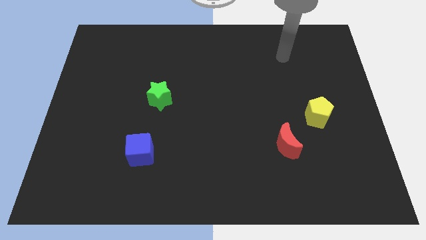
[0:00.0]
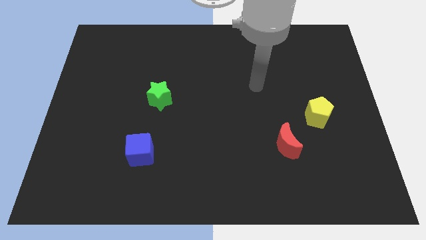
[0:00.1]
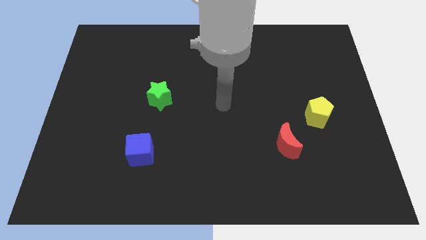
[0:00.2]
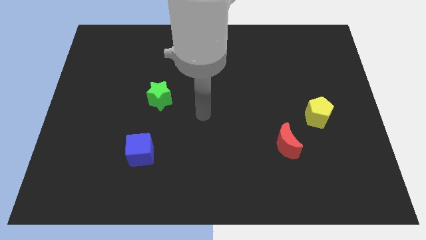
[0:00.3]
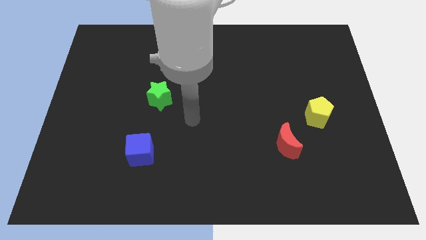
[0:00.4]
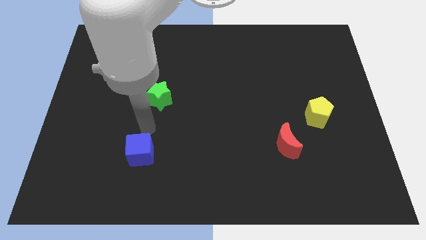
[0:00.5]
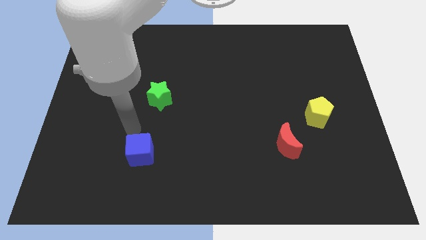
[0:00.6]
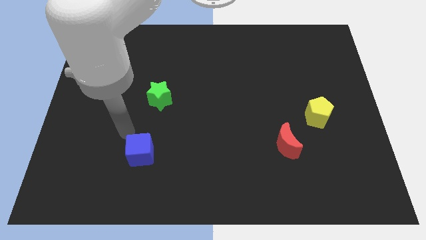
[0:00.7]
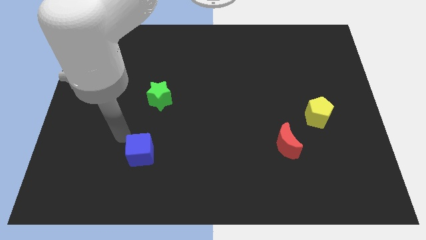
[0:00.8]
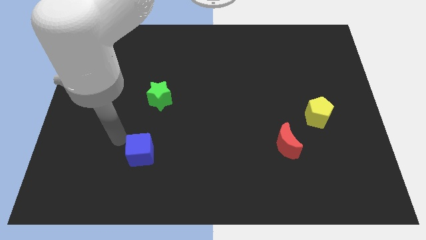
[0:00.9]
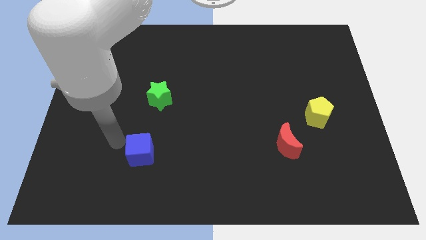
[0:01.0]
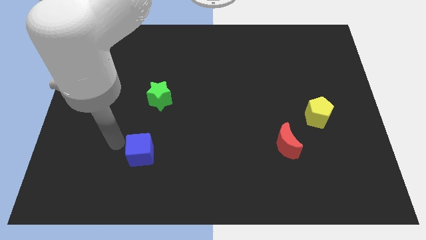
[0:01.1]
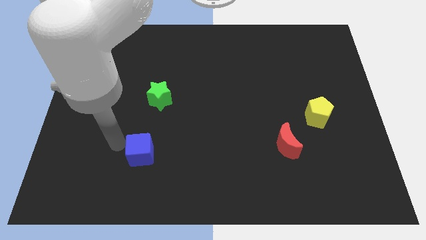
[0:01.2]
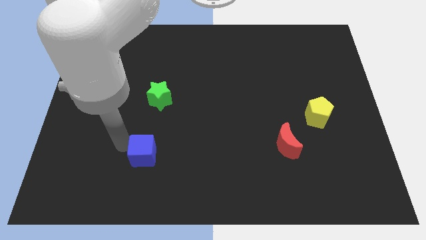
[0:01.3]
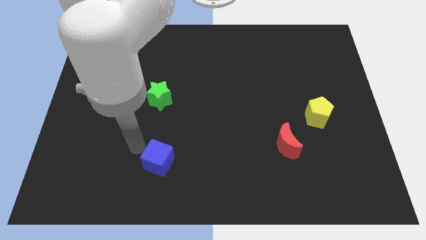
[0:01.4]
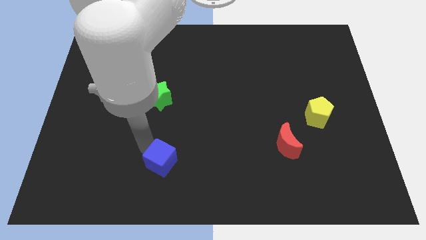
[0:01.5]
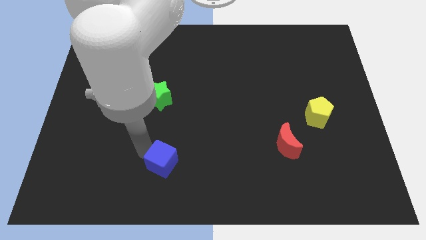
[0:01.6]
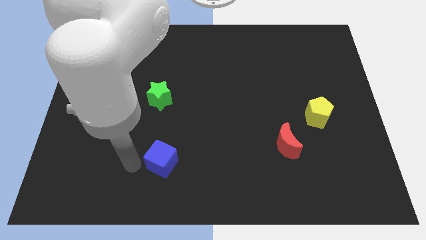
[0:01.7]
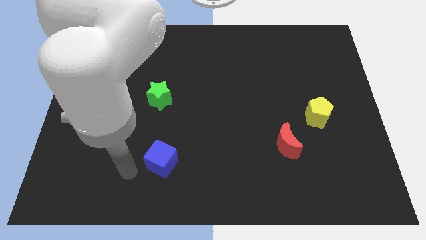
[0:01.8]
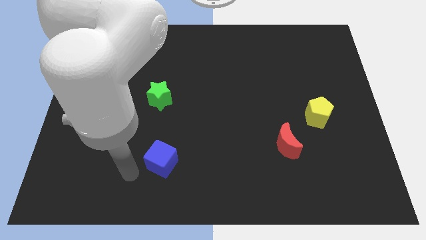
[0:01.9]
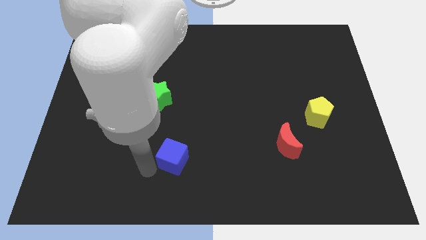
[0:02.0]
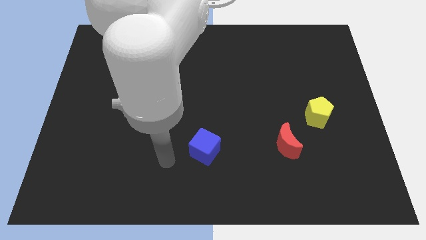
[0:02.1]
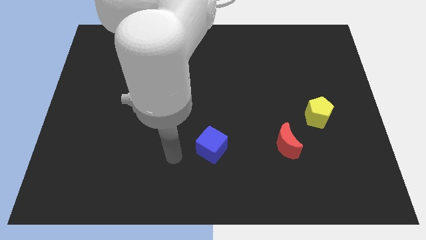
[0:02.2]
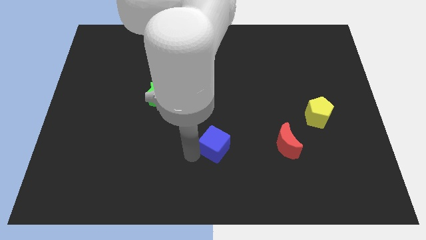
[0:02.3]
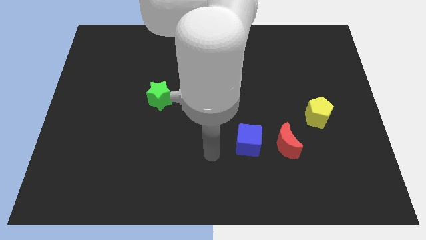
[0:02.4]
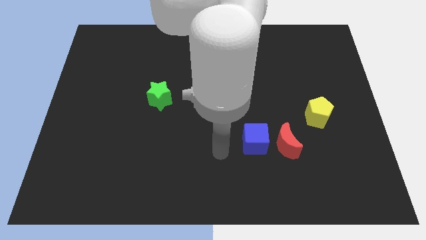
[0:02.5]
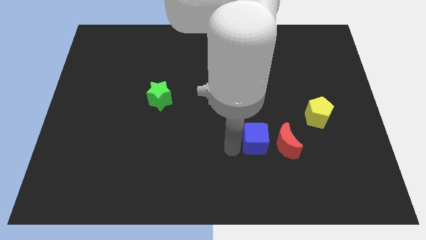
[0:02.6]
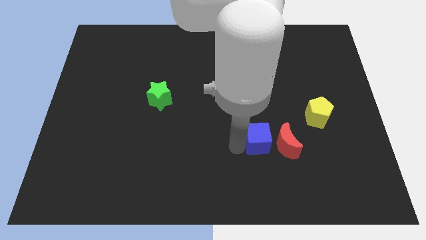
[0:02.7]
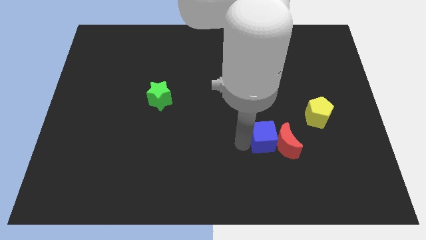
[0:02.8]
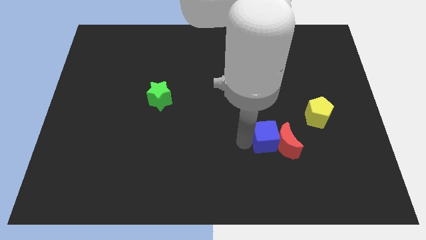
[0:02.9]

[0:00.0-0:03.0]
push the blue block towards the moon

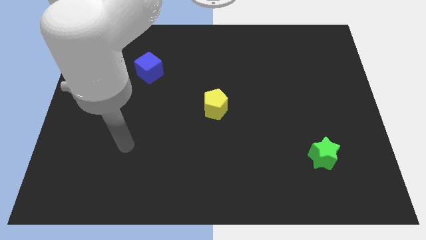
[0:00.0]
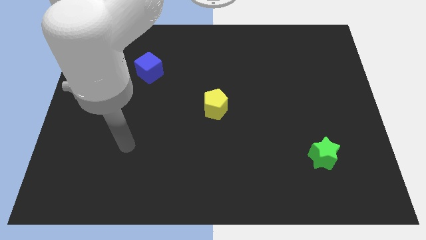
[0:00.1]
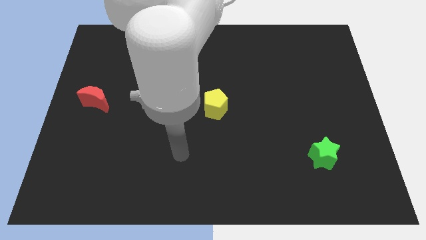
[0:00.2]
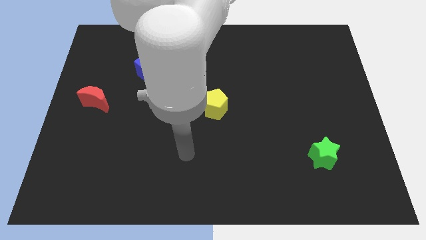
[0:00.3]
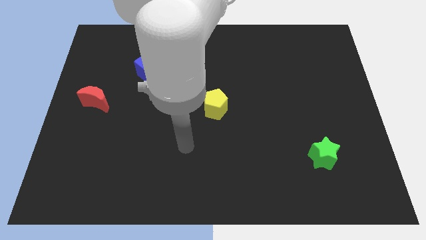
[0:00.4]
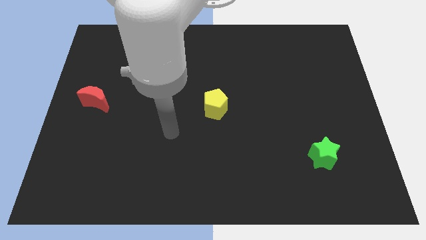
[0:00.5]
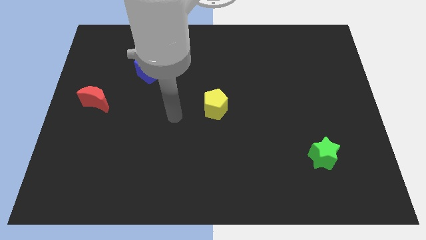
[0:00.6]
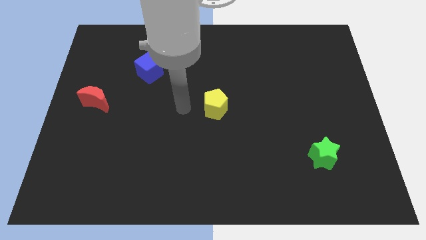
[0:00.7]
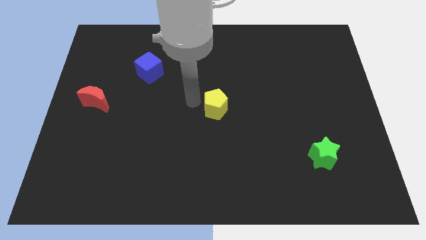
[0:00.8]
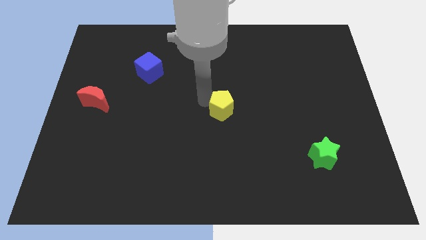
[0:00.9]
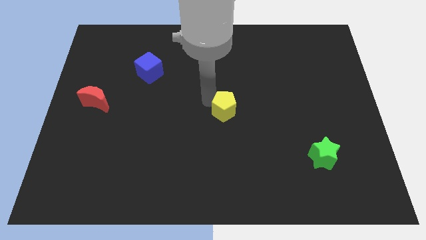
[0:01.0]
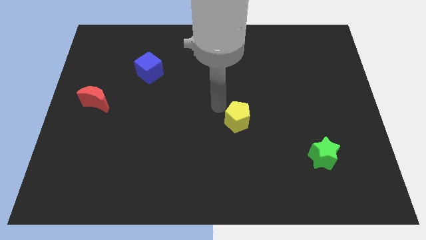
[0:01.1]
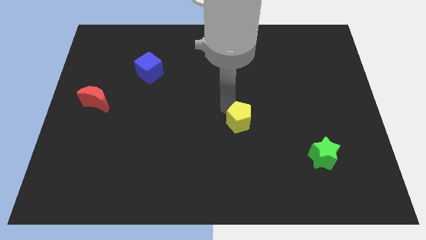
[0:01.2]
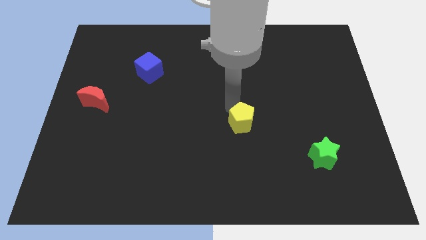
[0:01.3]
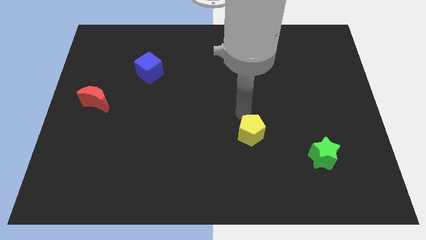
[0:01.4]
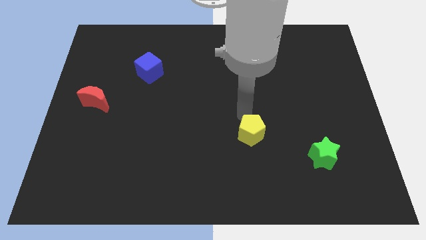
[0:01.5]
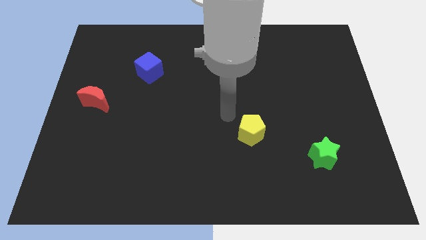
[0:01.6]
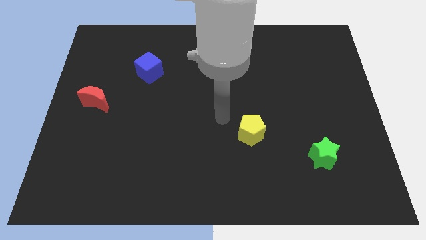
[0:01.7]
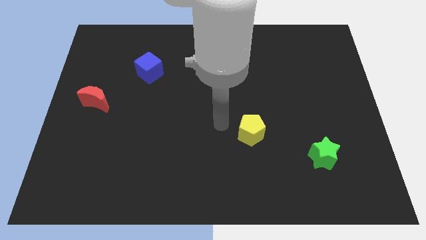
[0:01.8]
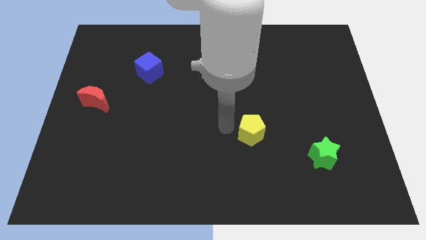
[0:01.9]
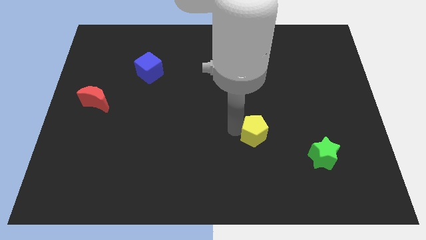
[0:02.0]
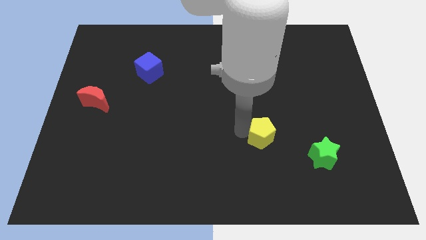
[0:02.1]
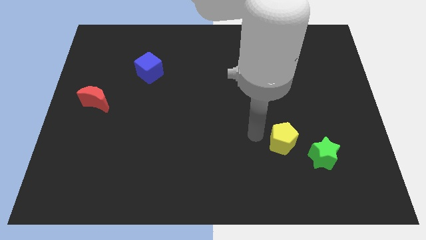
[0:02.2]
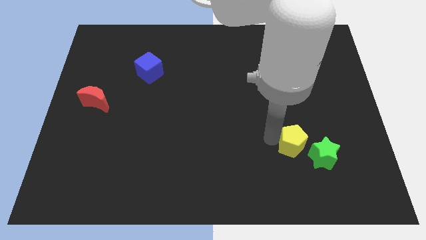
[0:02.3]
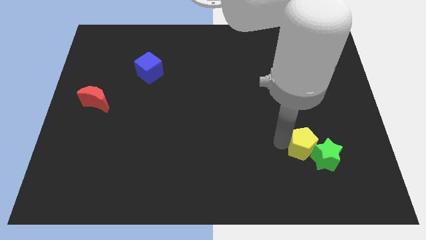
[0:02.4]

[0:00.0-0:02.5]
put the pentagon next to the green block

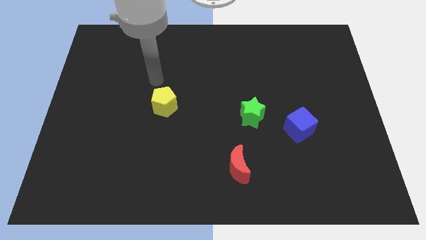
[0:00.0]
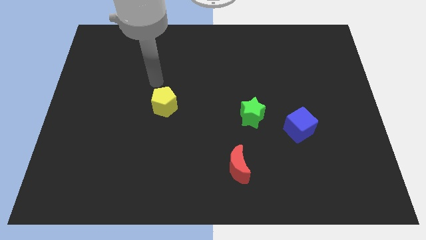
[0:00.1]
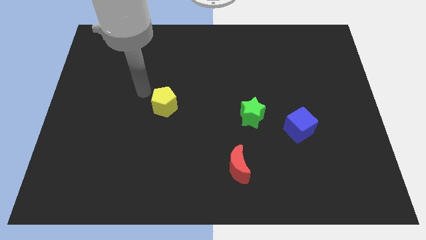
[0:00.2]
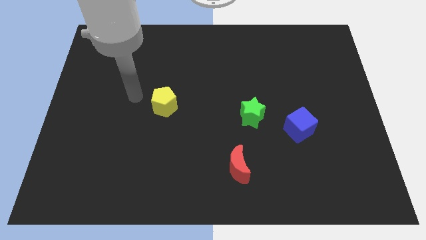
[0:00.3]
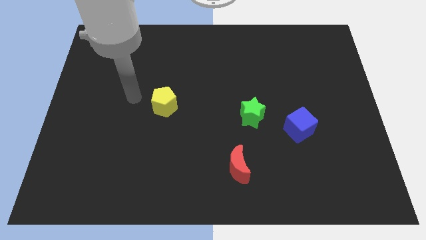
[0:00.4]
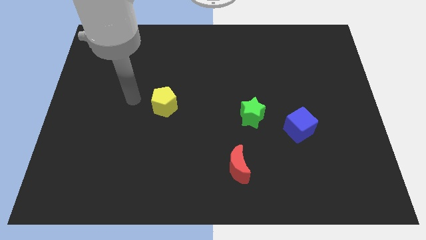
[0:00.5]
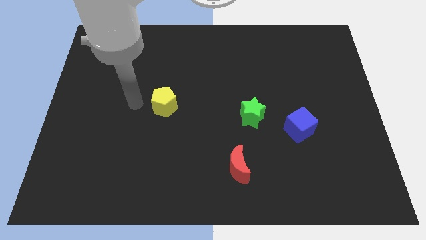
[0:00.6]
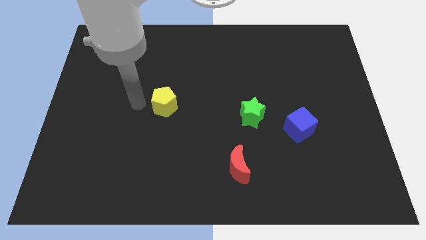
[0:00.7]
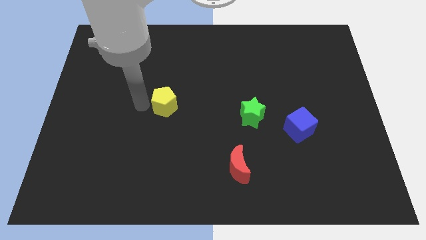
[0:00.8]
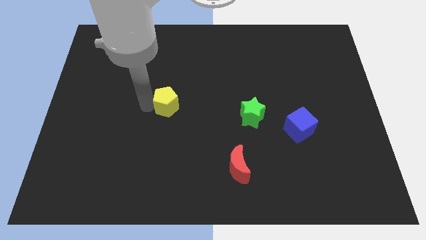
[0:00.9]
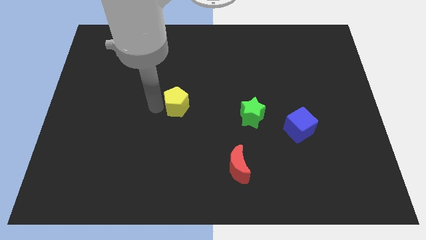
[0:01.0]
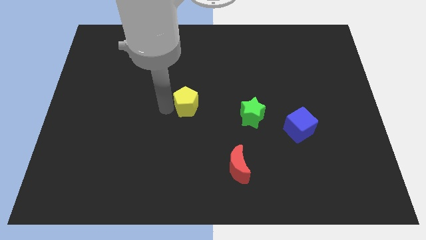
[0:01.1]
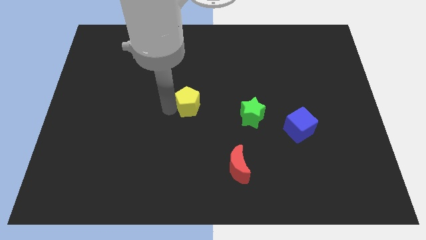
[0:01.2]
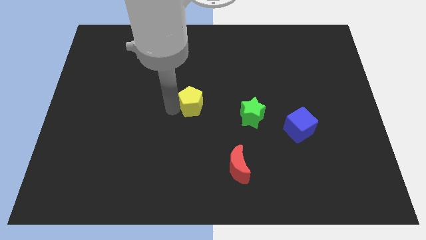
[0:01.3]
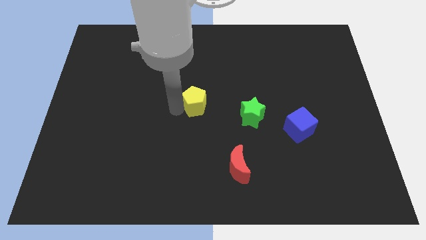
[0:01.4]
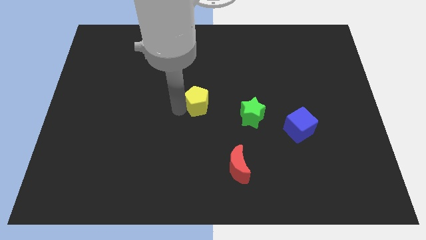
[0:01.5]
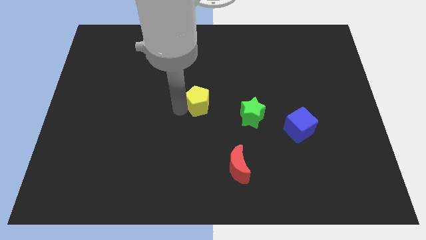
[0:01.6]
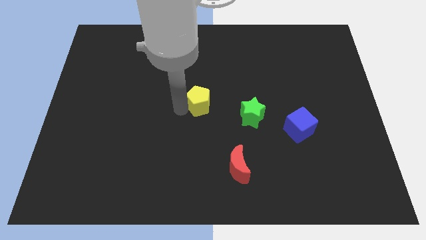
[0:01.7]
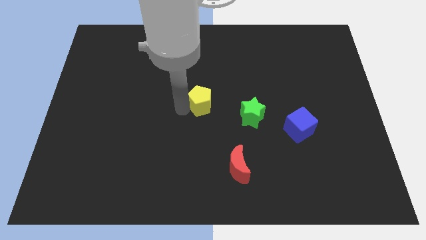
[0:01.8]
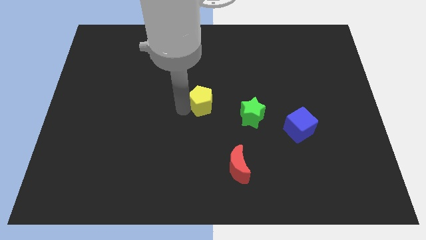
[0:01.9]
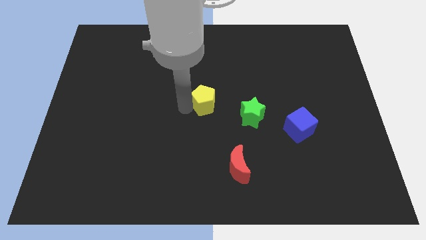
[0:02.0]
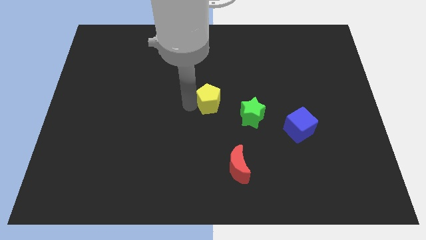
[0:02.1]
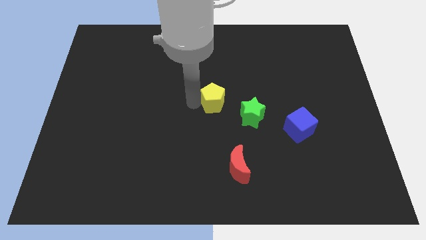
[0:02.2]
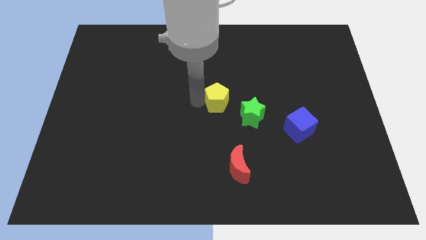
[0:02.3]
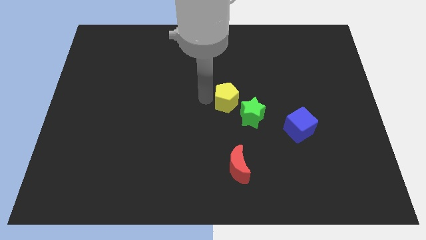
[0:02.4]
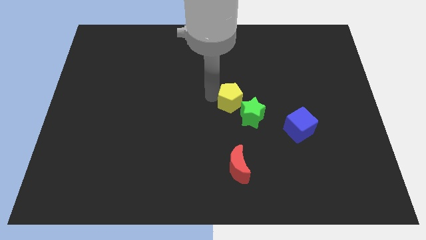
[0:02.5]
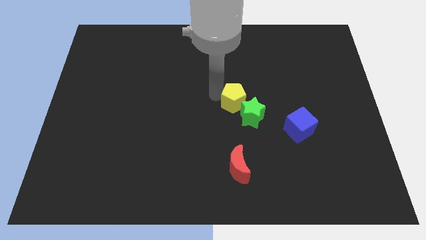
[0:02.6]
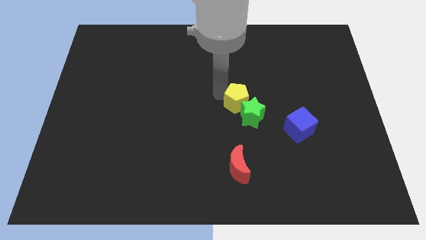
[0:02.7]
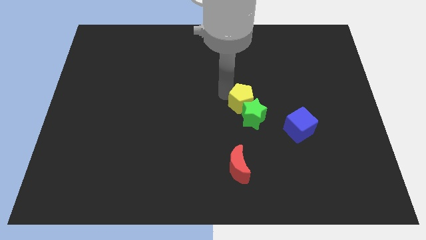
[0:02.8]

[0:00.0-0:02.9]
slide the yellow block close to the green block
